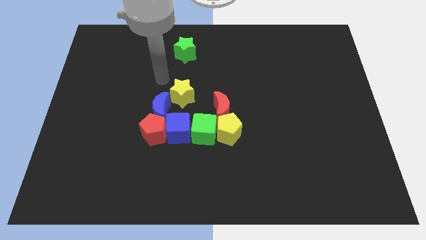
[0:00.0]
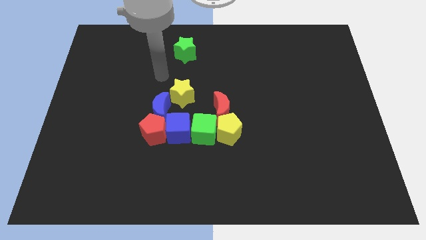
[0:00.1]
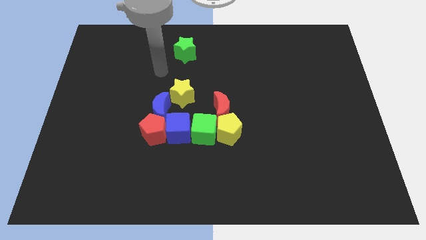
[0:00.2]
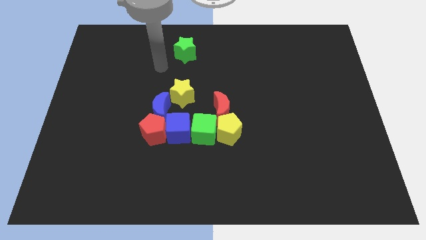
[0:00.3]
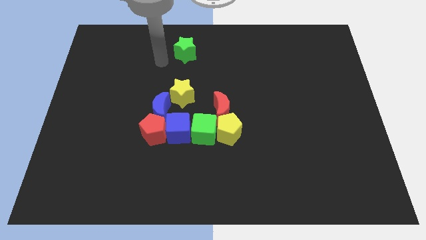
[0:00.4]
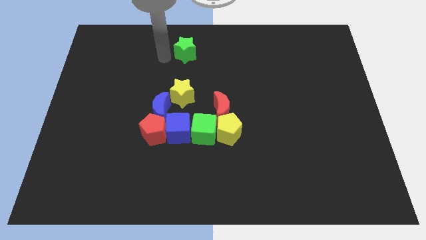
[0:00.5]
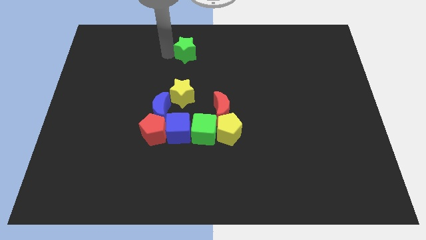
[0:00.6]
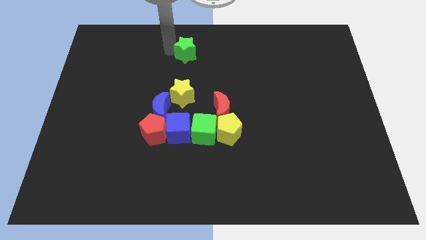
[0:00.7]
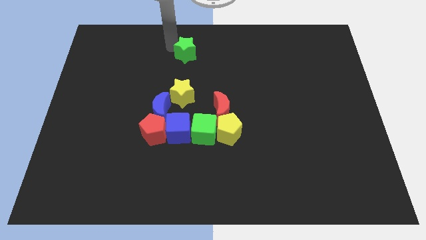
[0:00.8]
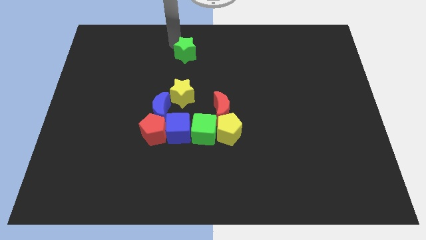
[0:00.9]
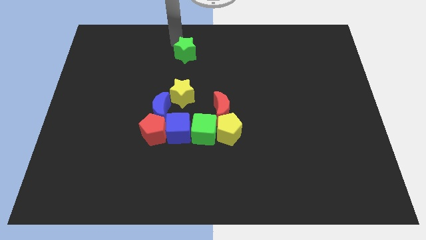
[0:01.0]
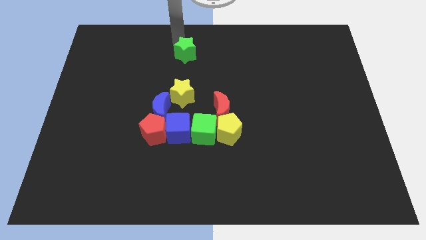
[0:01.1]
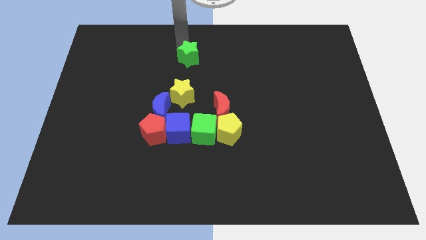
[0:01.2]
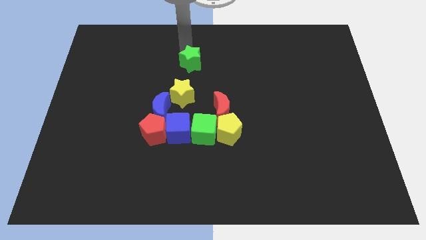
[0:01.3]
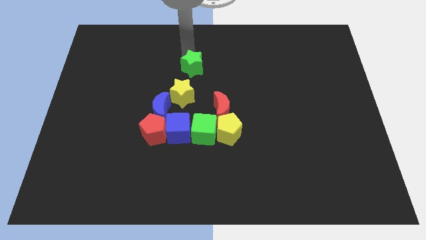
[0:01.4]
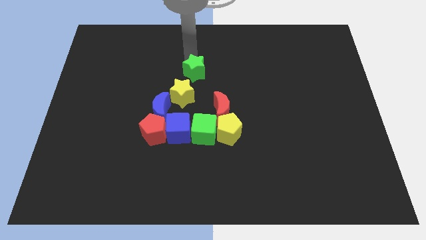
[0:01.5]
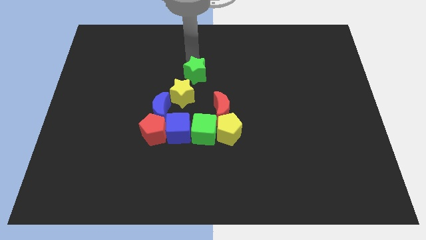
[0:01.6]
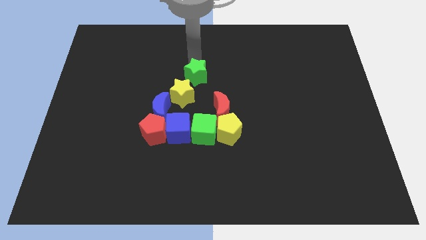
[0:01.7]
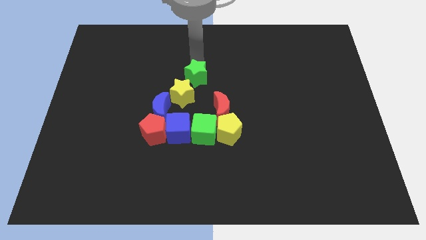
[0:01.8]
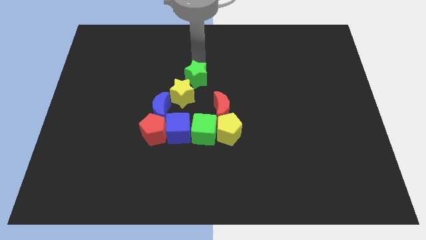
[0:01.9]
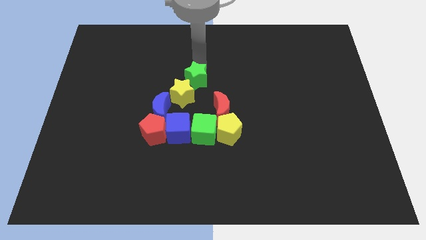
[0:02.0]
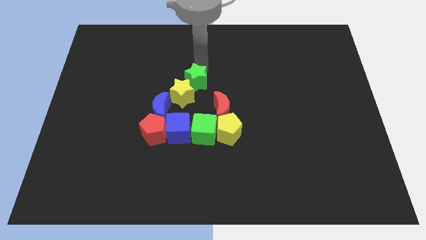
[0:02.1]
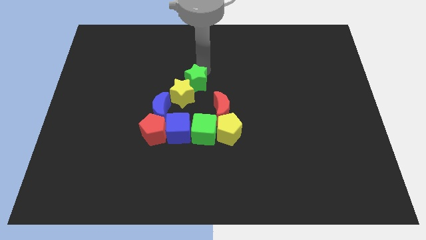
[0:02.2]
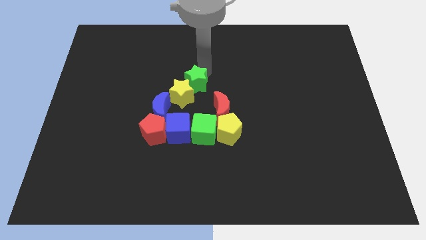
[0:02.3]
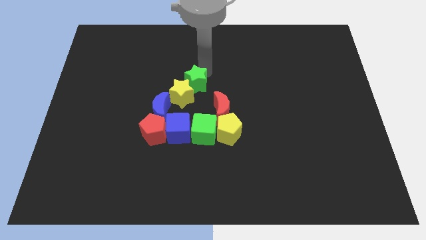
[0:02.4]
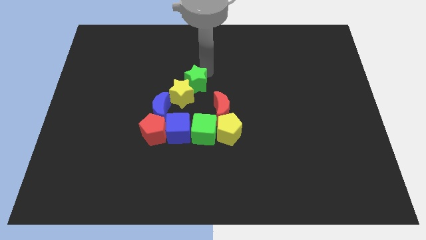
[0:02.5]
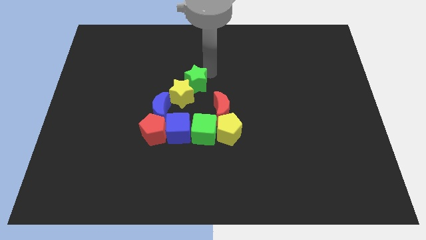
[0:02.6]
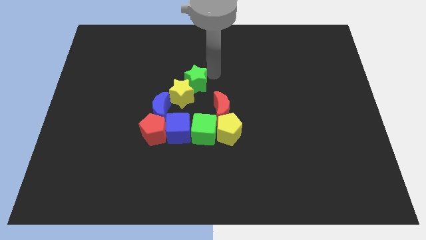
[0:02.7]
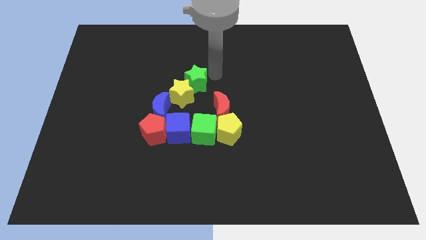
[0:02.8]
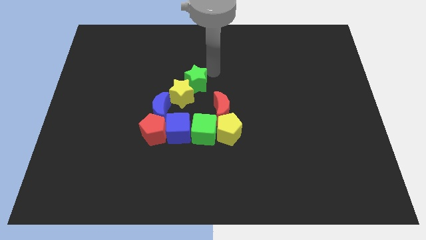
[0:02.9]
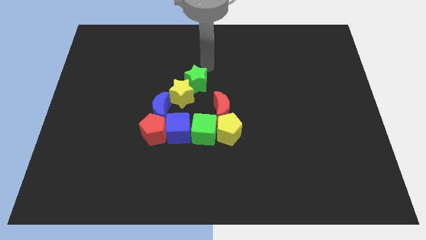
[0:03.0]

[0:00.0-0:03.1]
place the green star diagonal to the yellow star

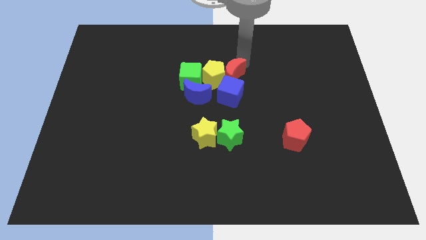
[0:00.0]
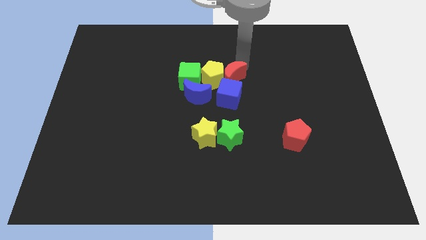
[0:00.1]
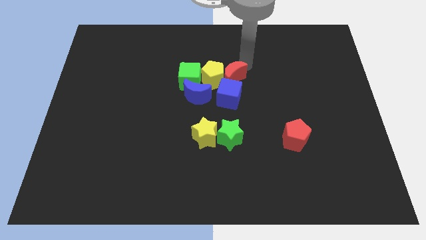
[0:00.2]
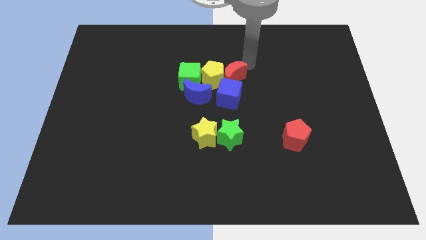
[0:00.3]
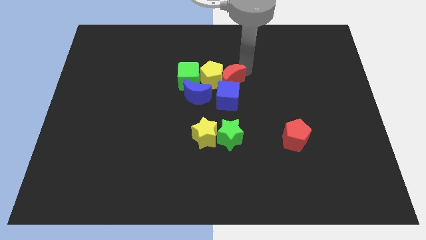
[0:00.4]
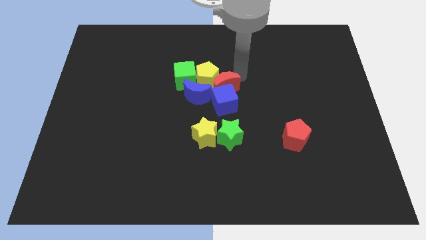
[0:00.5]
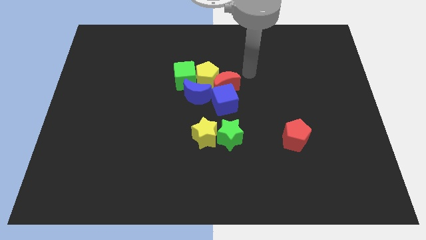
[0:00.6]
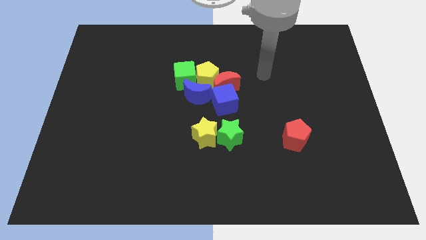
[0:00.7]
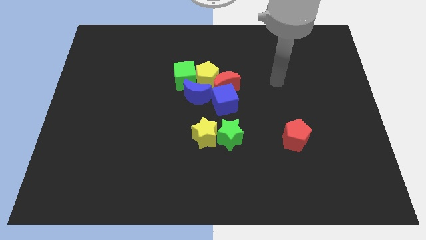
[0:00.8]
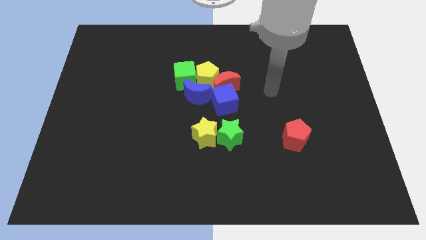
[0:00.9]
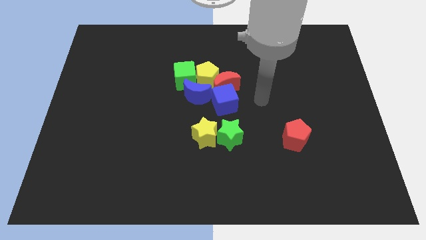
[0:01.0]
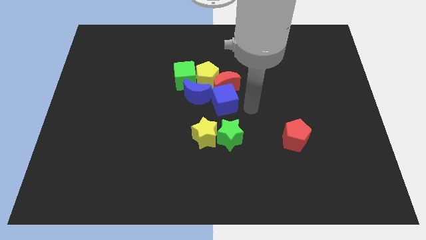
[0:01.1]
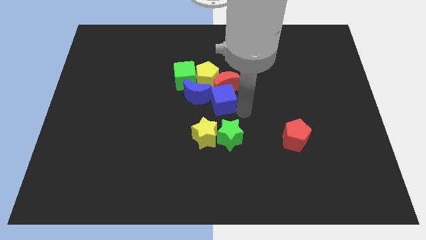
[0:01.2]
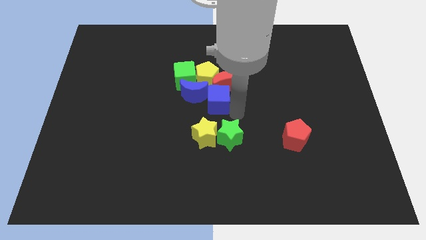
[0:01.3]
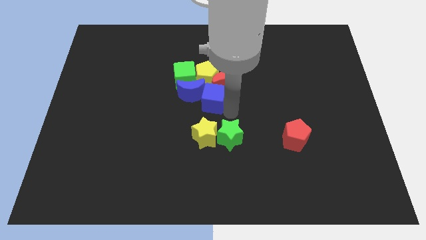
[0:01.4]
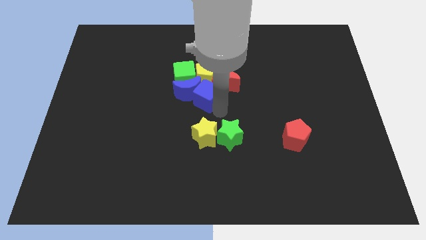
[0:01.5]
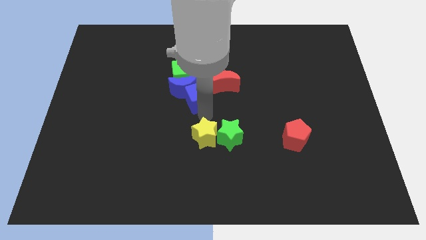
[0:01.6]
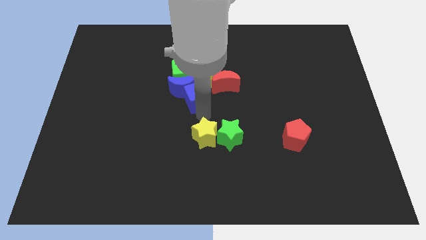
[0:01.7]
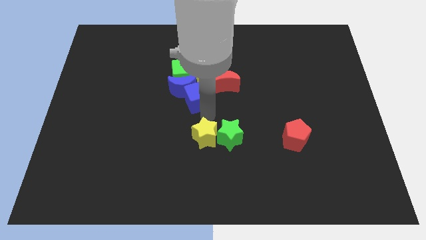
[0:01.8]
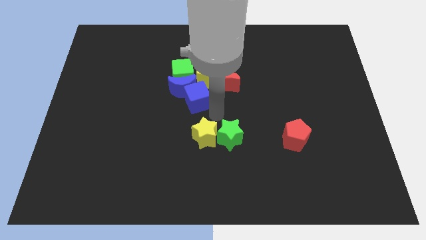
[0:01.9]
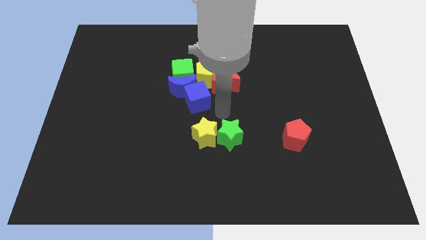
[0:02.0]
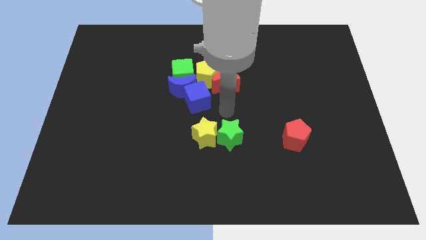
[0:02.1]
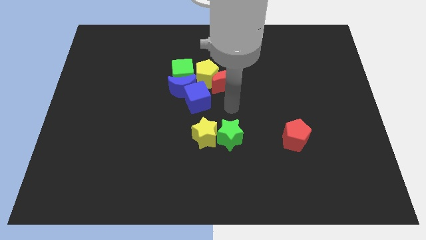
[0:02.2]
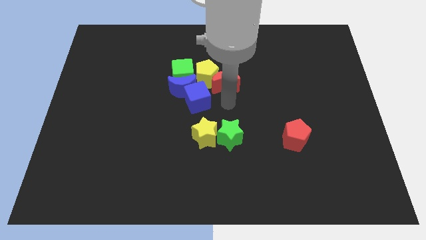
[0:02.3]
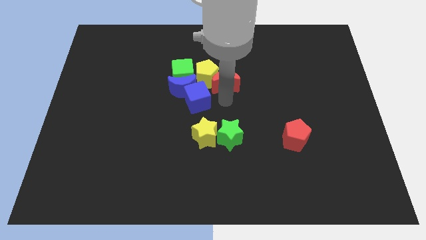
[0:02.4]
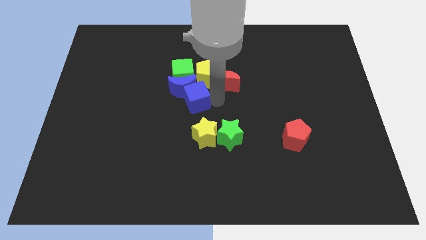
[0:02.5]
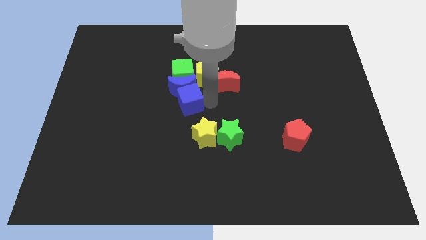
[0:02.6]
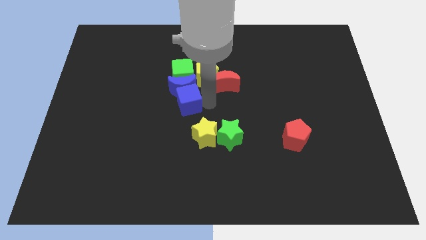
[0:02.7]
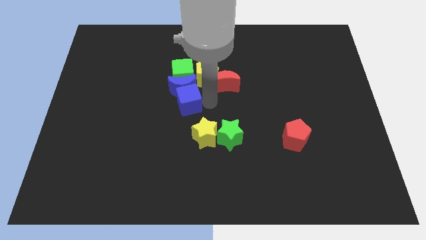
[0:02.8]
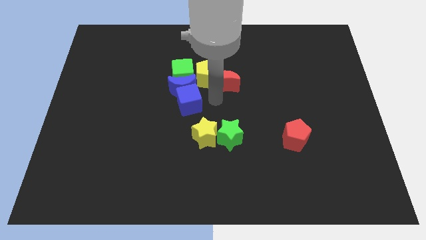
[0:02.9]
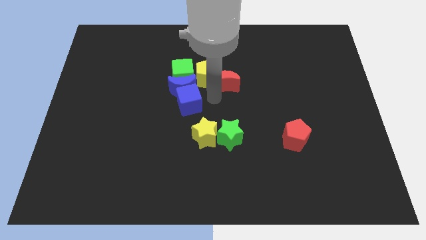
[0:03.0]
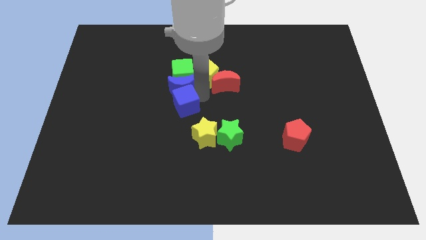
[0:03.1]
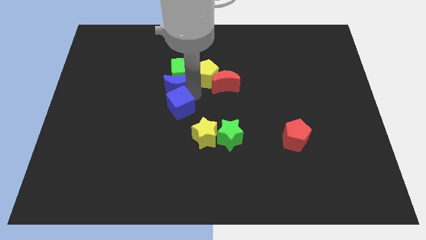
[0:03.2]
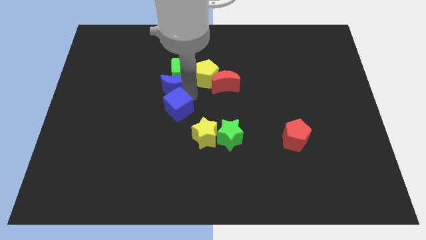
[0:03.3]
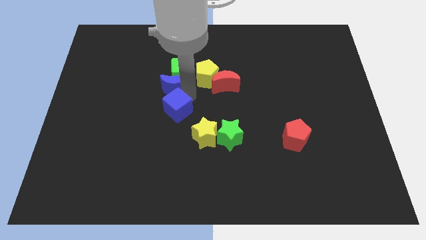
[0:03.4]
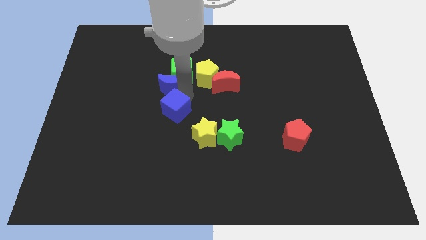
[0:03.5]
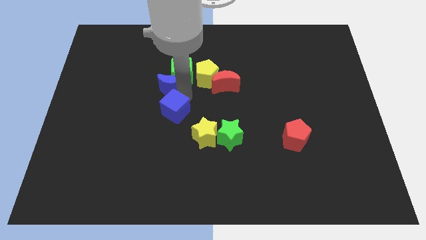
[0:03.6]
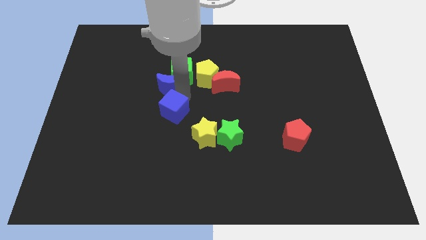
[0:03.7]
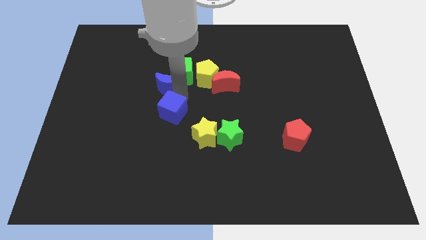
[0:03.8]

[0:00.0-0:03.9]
move the blue cube towards the bottom side of the blue moon

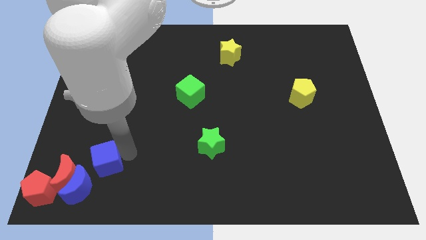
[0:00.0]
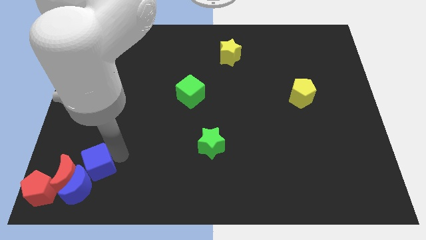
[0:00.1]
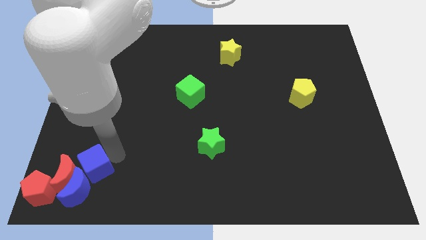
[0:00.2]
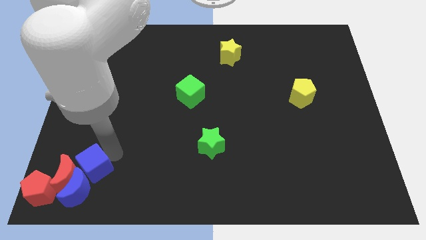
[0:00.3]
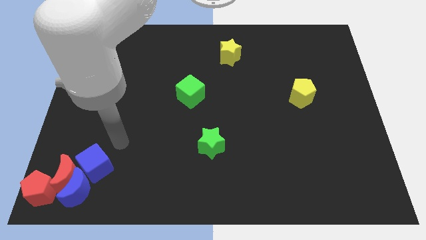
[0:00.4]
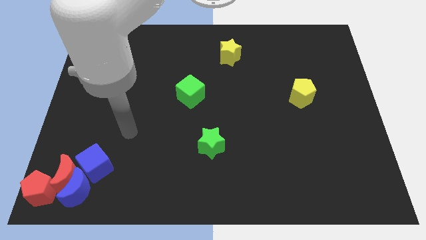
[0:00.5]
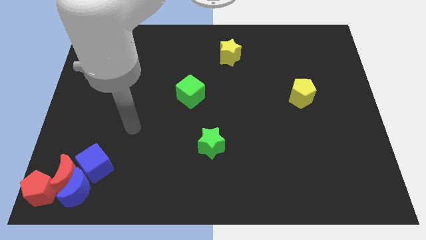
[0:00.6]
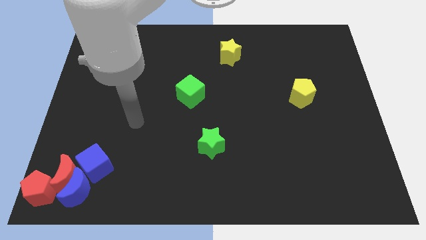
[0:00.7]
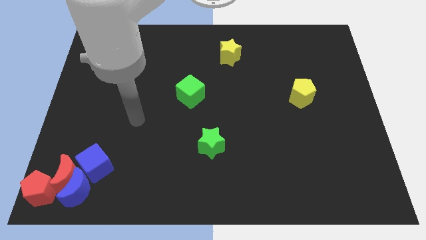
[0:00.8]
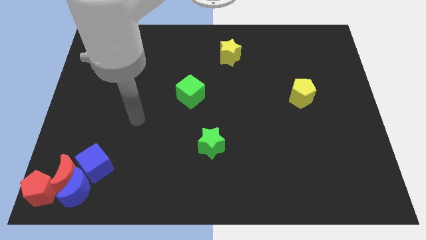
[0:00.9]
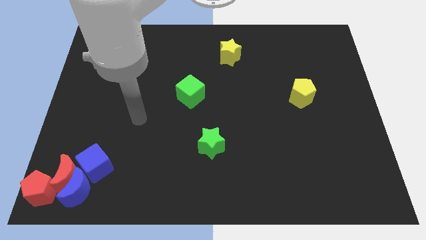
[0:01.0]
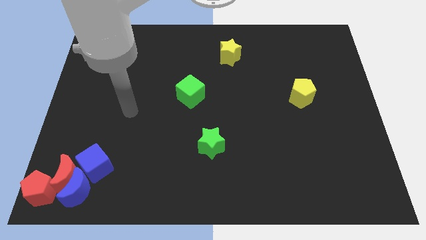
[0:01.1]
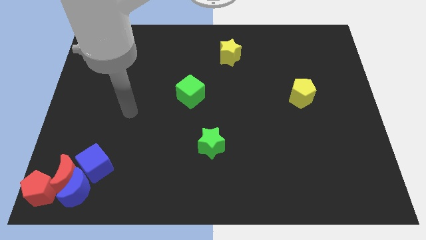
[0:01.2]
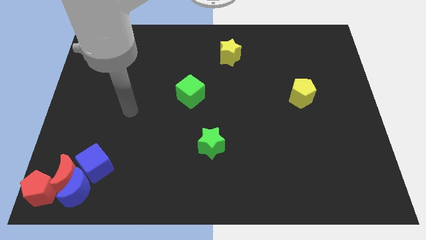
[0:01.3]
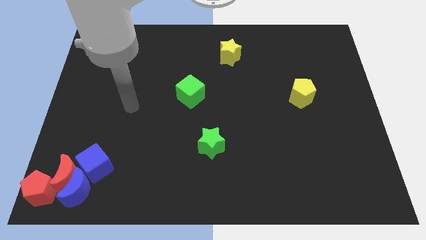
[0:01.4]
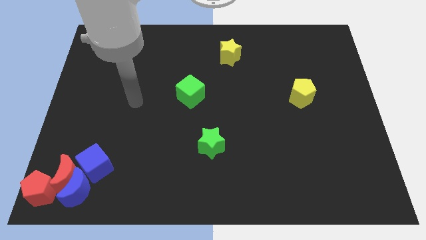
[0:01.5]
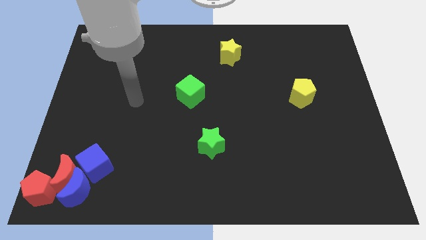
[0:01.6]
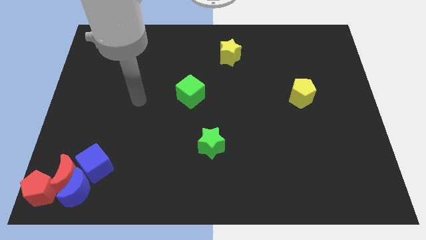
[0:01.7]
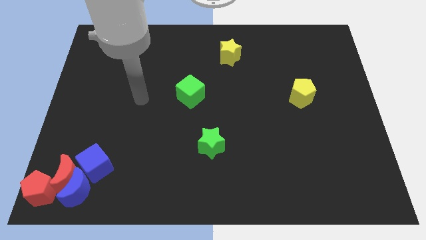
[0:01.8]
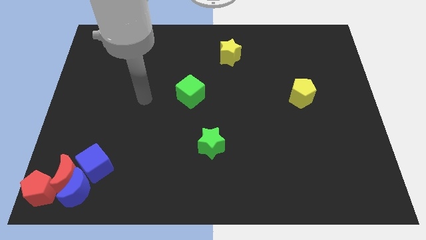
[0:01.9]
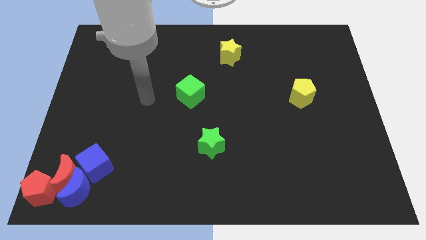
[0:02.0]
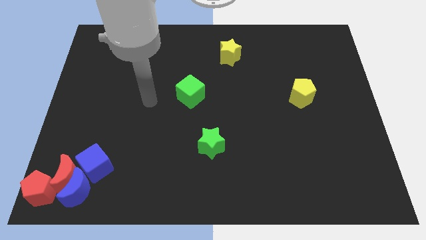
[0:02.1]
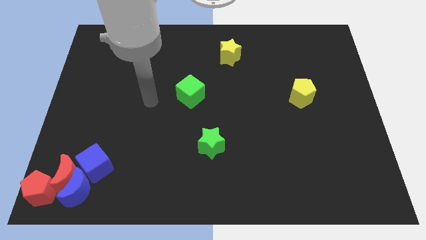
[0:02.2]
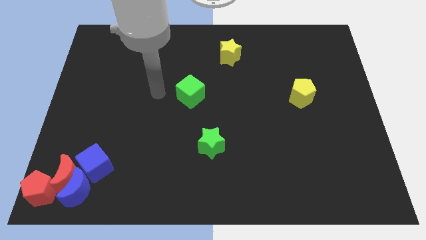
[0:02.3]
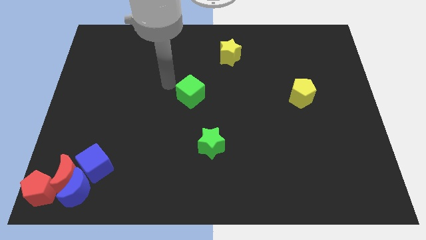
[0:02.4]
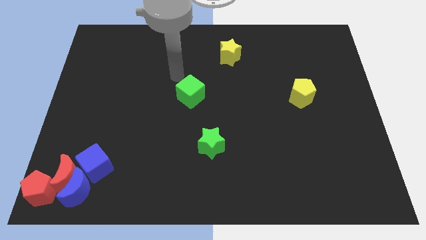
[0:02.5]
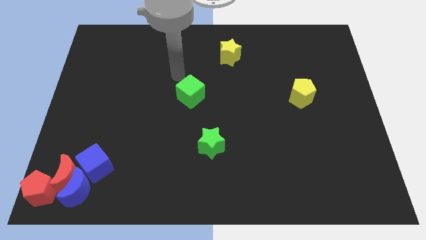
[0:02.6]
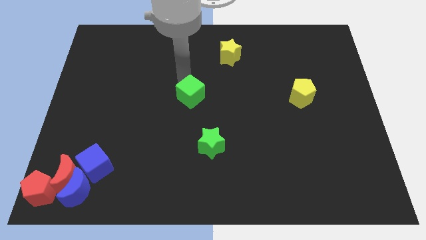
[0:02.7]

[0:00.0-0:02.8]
move your arm around the green cube
